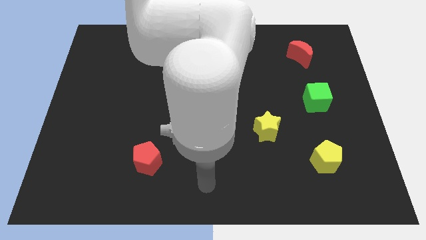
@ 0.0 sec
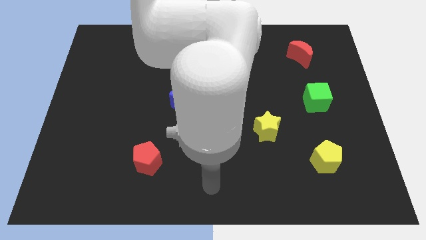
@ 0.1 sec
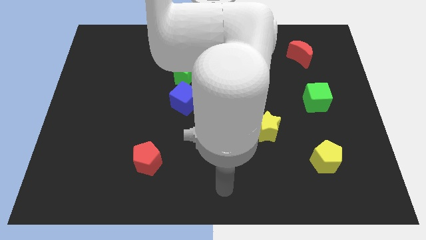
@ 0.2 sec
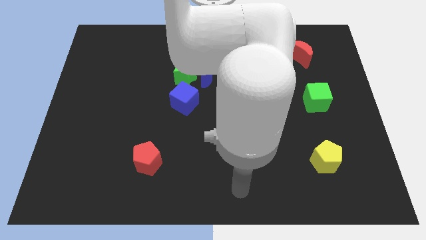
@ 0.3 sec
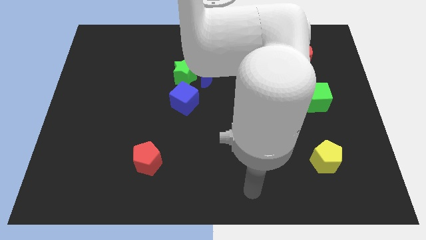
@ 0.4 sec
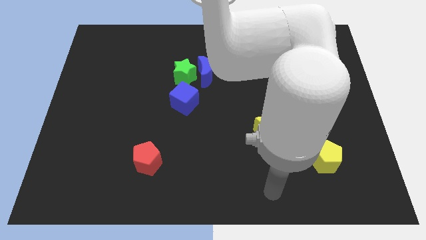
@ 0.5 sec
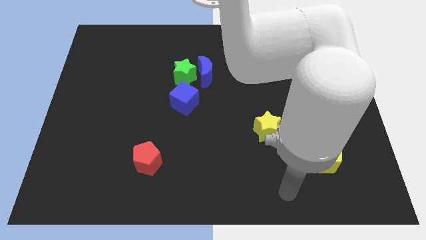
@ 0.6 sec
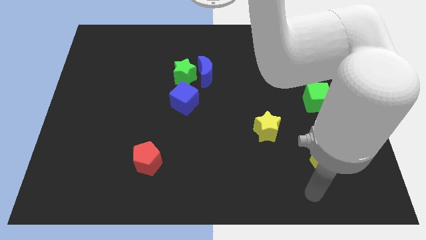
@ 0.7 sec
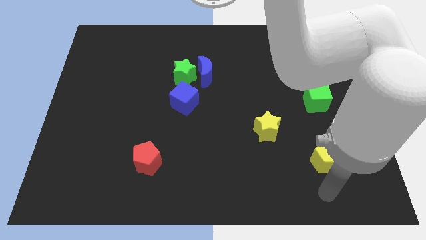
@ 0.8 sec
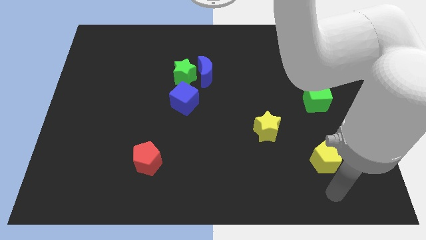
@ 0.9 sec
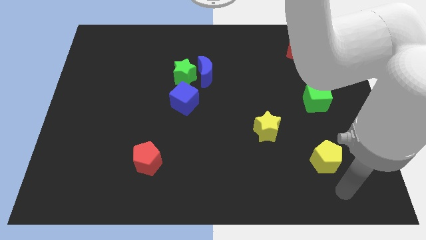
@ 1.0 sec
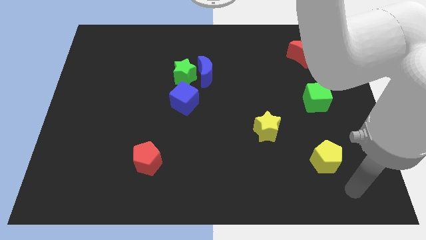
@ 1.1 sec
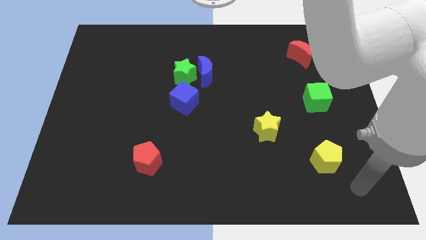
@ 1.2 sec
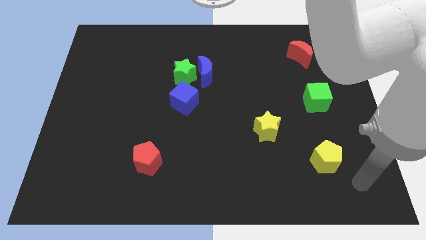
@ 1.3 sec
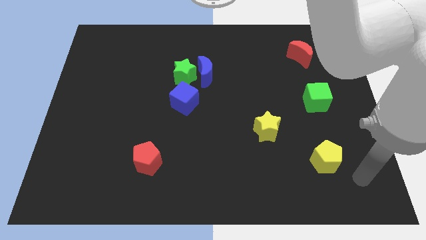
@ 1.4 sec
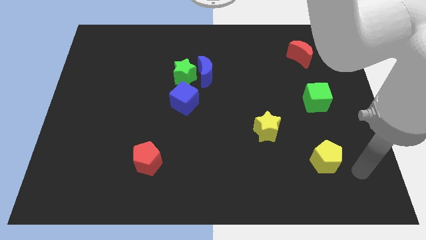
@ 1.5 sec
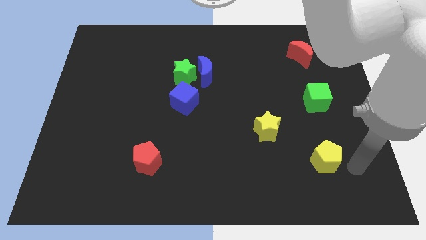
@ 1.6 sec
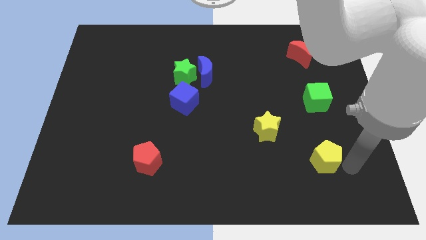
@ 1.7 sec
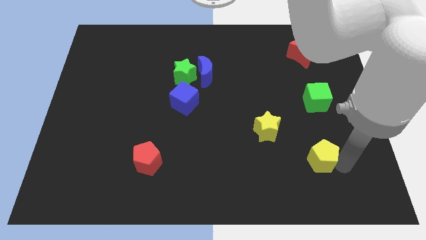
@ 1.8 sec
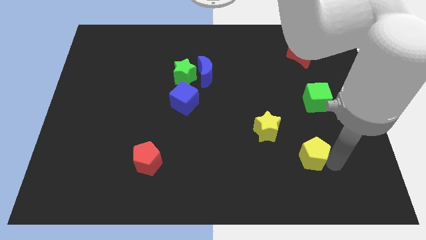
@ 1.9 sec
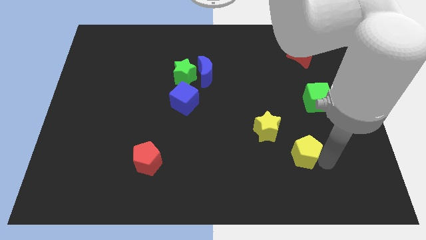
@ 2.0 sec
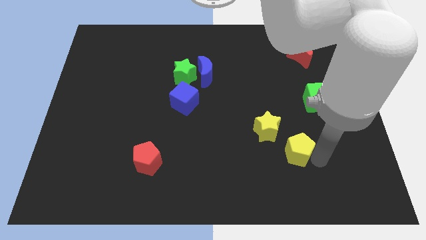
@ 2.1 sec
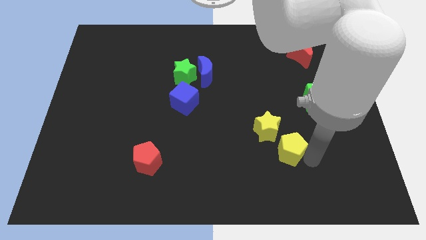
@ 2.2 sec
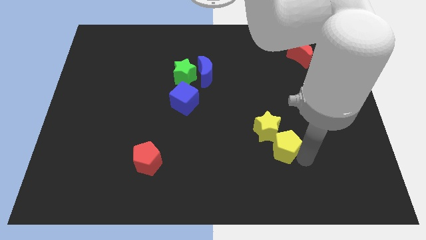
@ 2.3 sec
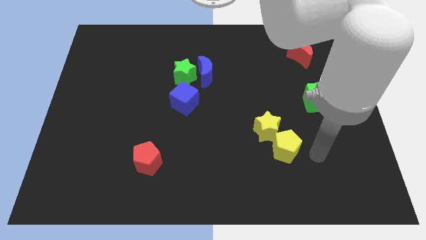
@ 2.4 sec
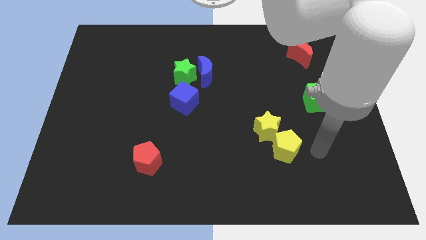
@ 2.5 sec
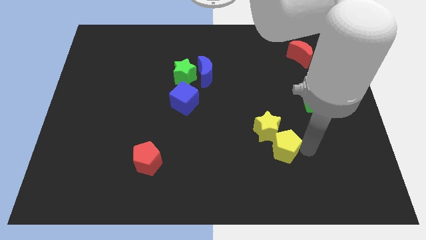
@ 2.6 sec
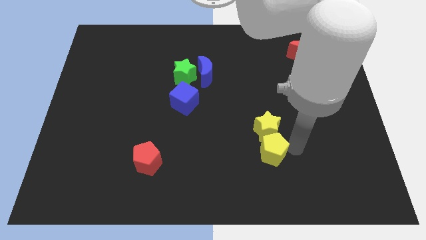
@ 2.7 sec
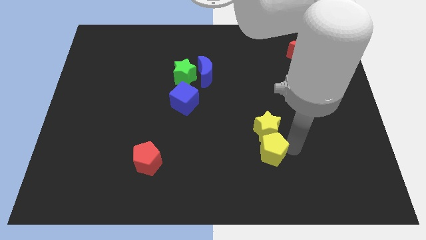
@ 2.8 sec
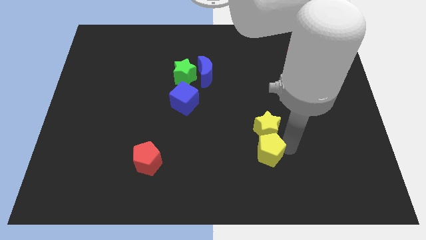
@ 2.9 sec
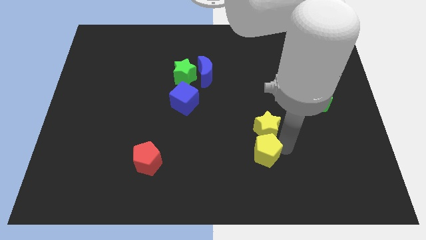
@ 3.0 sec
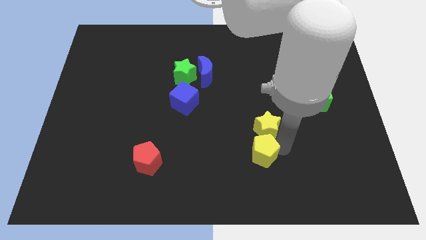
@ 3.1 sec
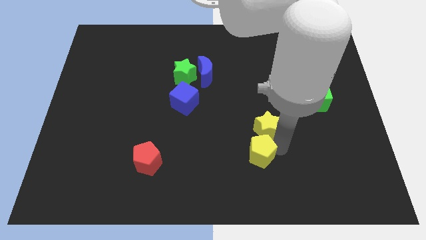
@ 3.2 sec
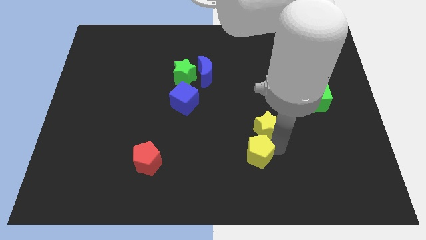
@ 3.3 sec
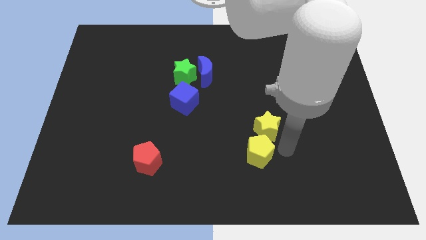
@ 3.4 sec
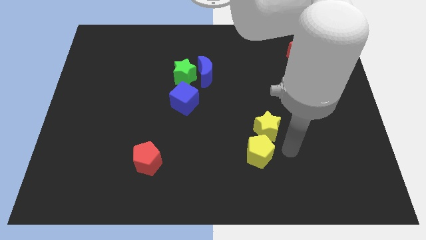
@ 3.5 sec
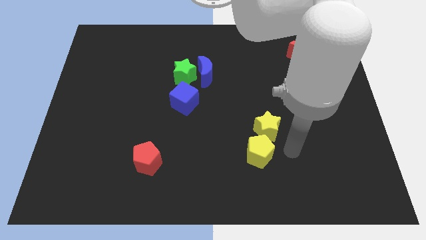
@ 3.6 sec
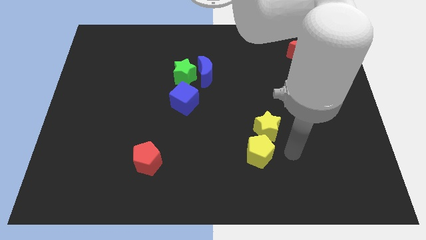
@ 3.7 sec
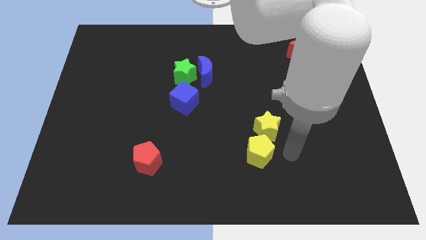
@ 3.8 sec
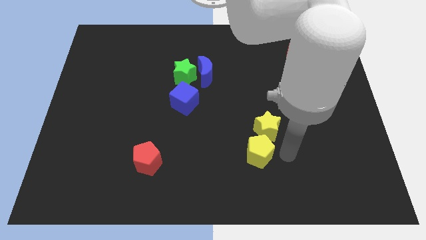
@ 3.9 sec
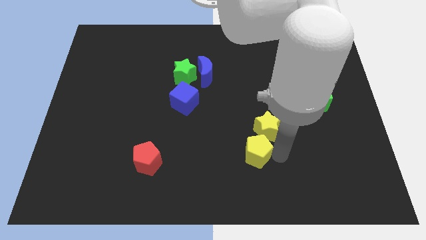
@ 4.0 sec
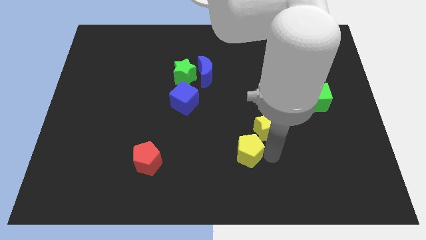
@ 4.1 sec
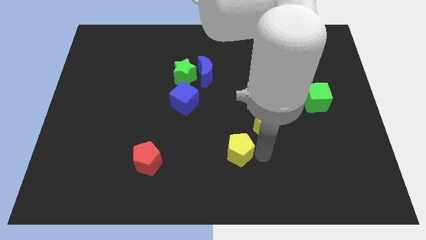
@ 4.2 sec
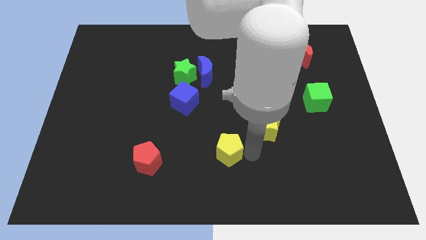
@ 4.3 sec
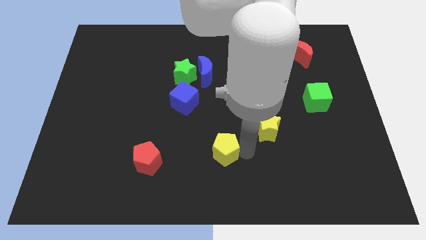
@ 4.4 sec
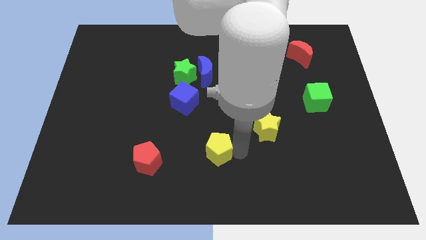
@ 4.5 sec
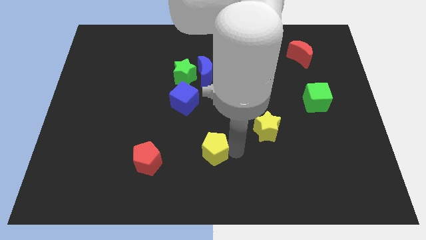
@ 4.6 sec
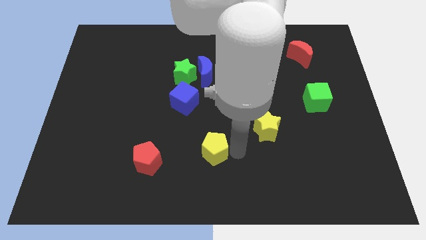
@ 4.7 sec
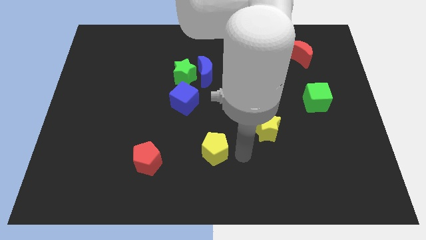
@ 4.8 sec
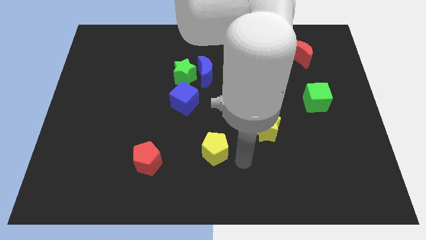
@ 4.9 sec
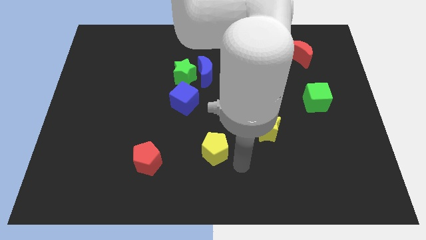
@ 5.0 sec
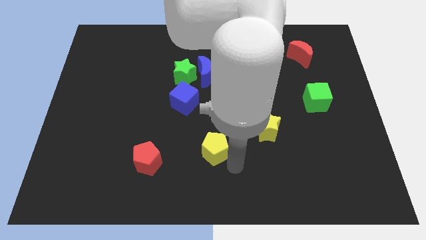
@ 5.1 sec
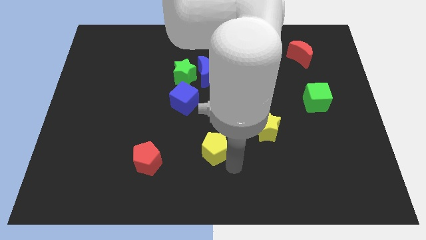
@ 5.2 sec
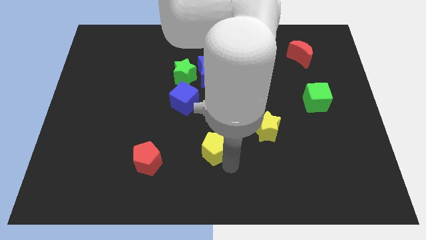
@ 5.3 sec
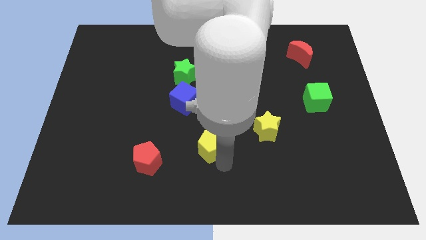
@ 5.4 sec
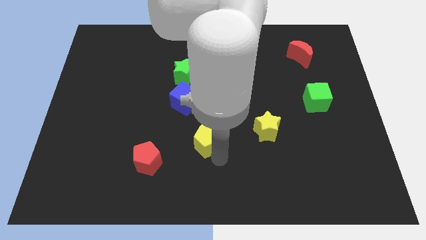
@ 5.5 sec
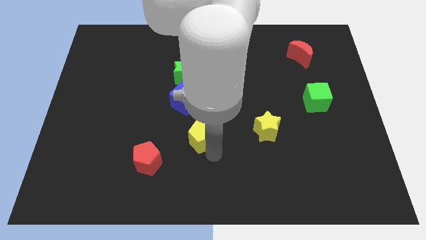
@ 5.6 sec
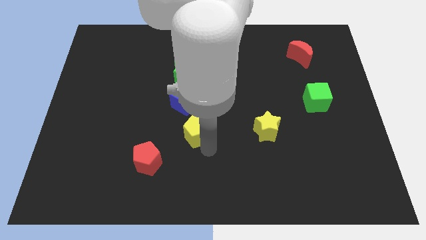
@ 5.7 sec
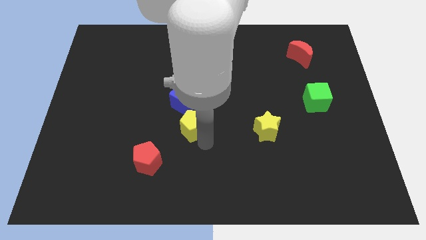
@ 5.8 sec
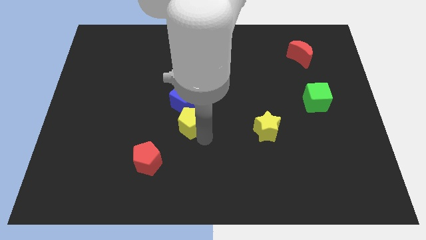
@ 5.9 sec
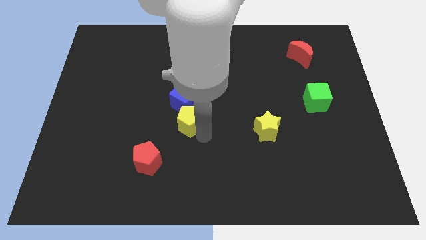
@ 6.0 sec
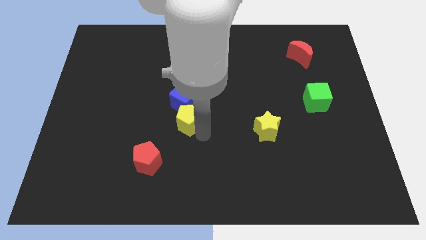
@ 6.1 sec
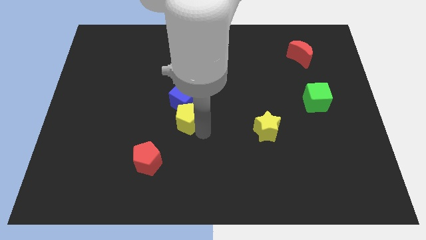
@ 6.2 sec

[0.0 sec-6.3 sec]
push the yellow pentagon towards the blue cube

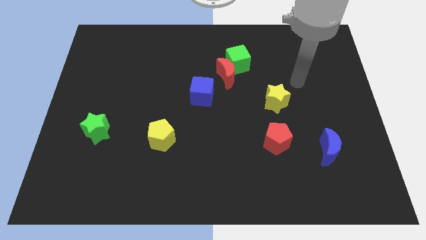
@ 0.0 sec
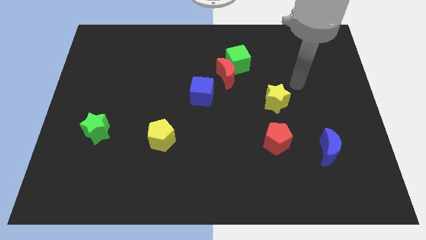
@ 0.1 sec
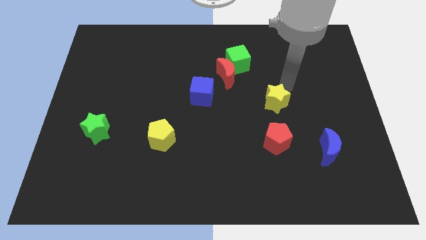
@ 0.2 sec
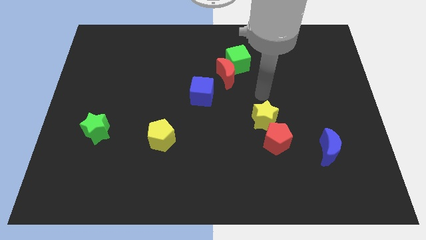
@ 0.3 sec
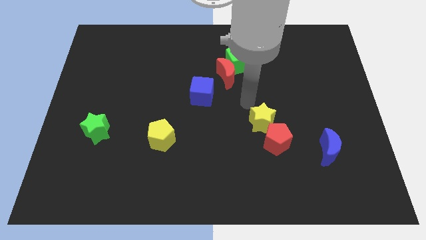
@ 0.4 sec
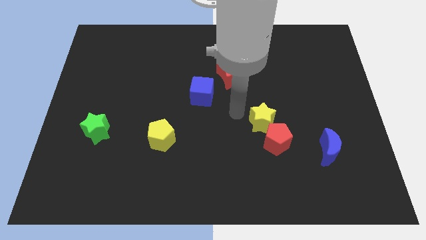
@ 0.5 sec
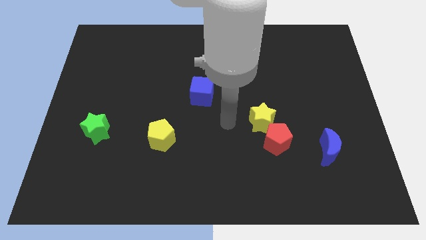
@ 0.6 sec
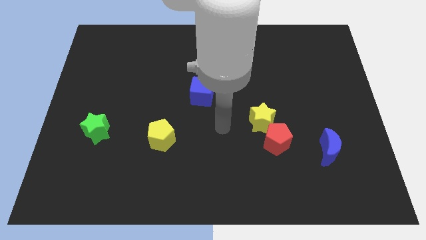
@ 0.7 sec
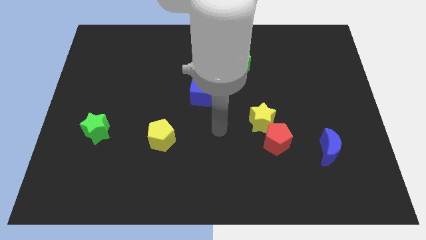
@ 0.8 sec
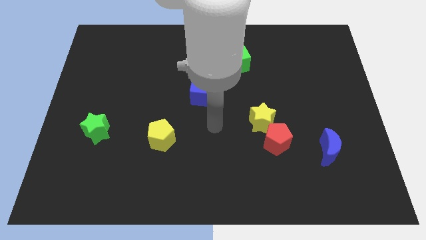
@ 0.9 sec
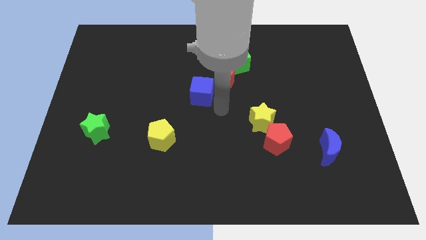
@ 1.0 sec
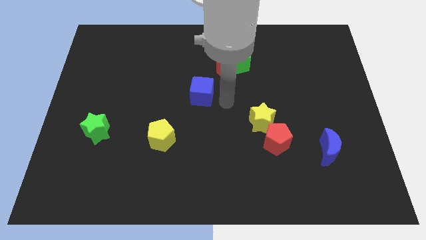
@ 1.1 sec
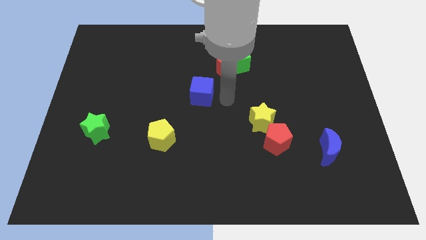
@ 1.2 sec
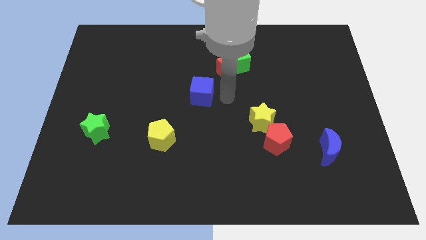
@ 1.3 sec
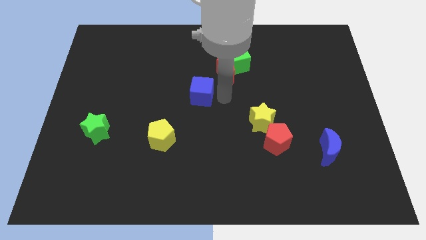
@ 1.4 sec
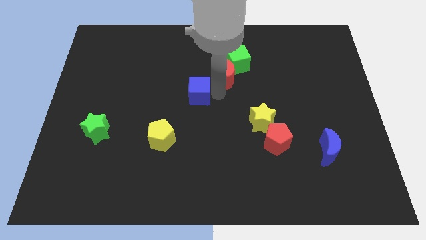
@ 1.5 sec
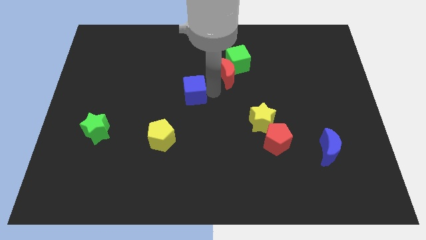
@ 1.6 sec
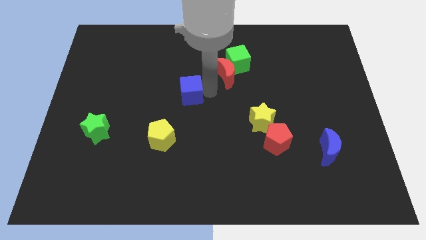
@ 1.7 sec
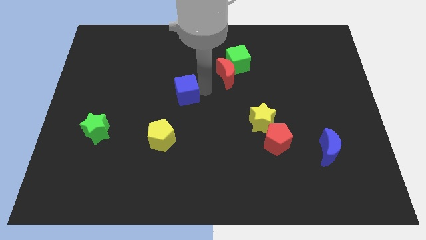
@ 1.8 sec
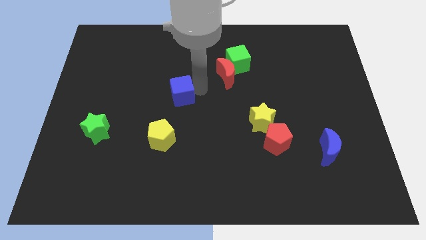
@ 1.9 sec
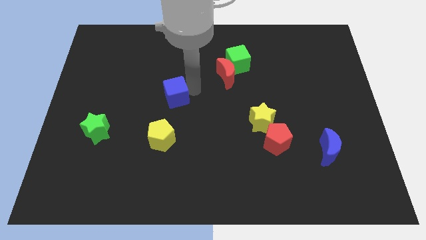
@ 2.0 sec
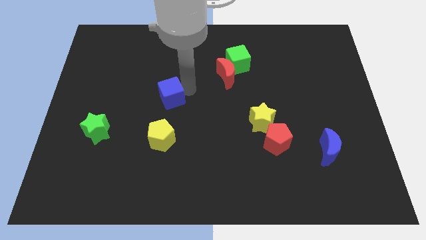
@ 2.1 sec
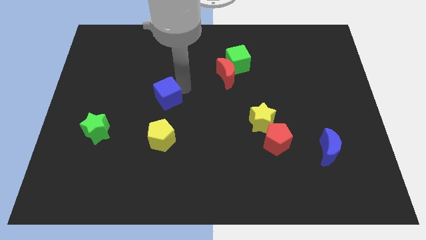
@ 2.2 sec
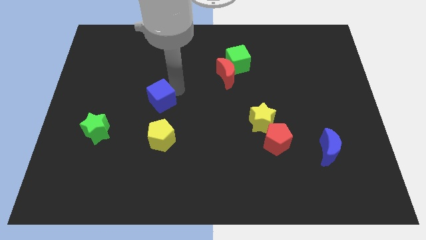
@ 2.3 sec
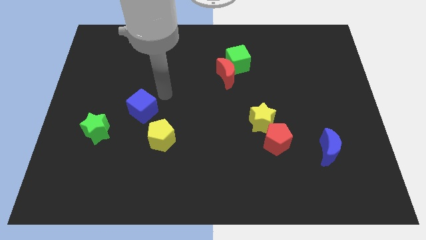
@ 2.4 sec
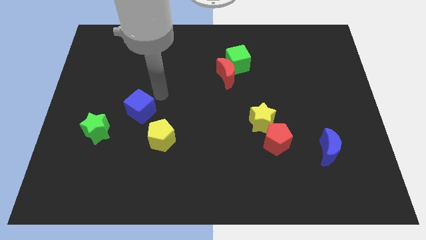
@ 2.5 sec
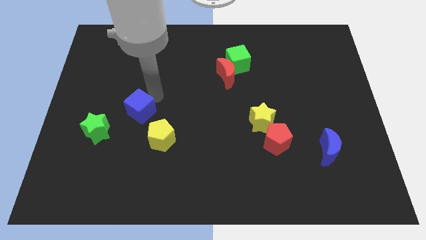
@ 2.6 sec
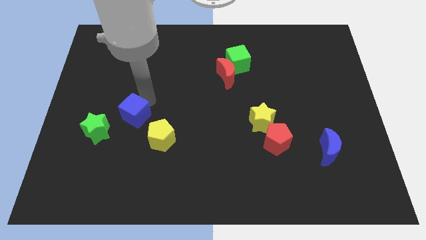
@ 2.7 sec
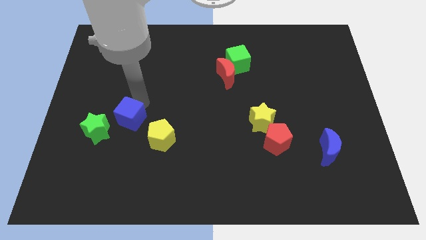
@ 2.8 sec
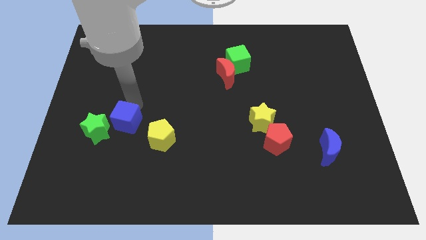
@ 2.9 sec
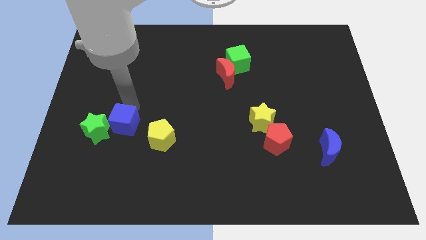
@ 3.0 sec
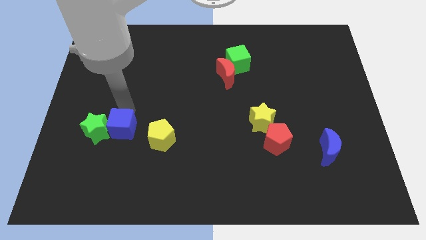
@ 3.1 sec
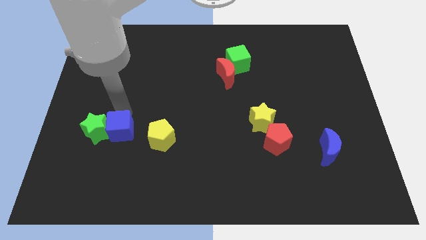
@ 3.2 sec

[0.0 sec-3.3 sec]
move the blue cube towards the green star
